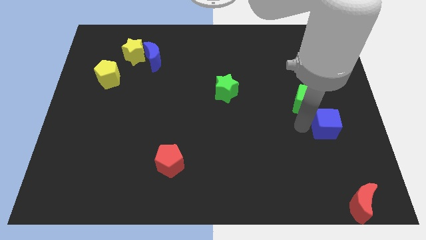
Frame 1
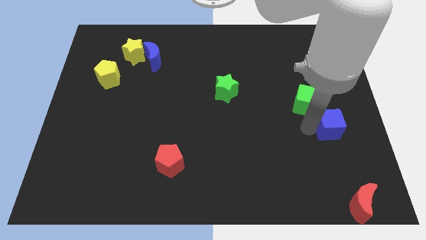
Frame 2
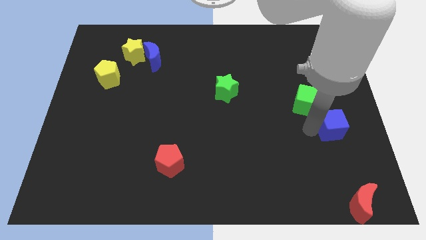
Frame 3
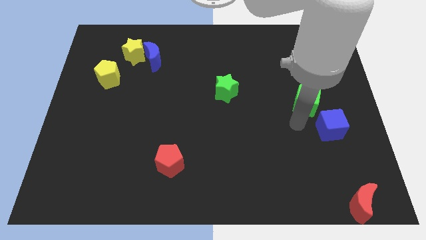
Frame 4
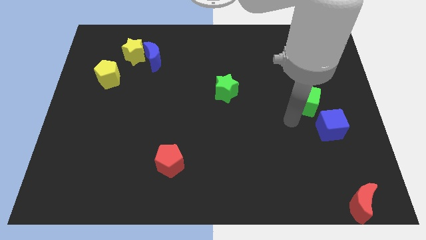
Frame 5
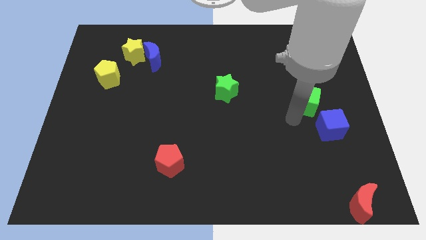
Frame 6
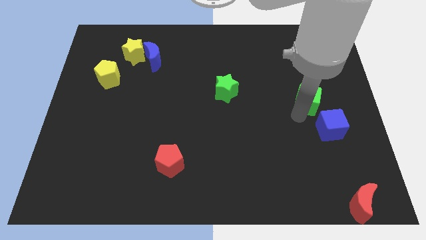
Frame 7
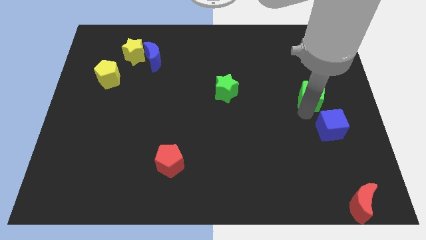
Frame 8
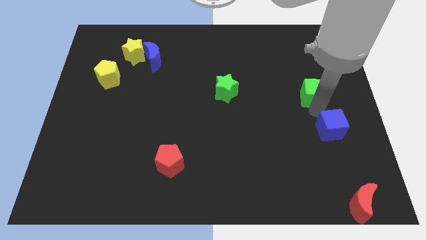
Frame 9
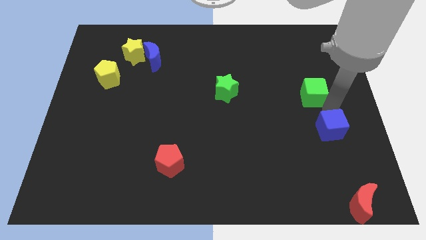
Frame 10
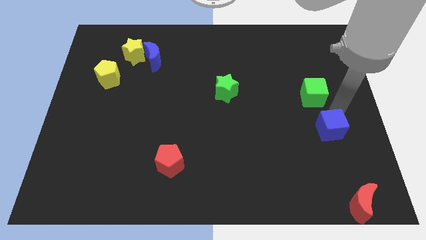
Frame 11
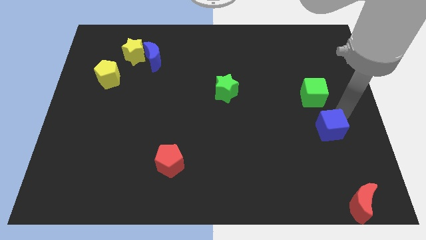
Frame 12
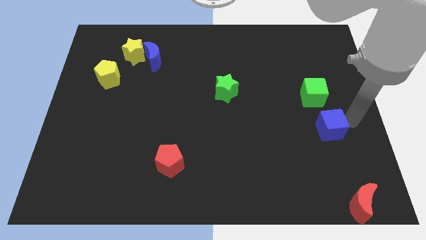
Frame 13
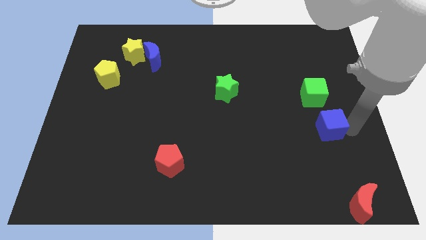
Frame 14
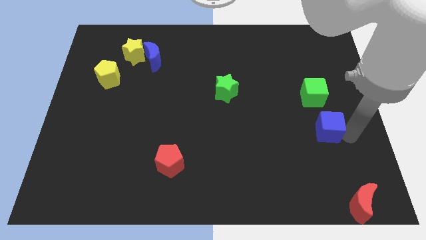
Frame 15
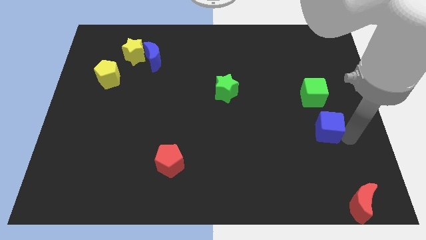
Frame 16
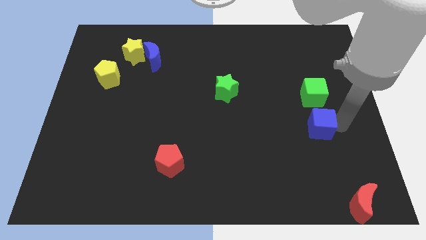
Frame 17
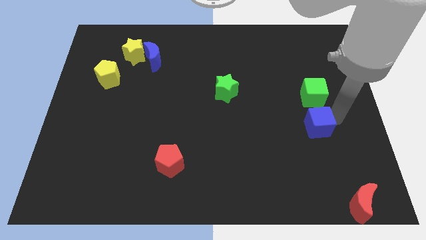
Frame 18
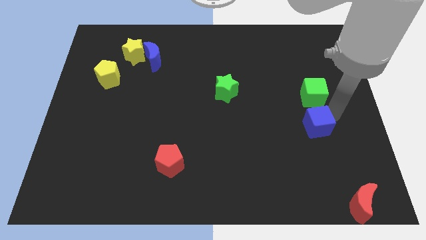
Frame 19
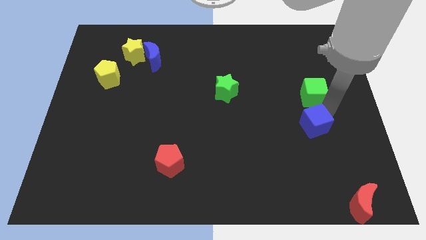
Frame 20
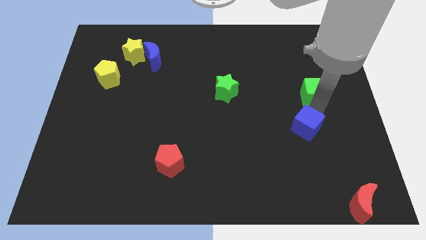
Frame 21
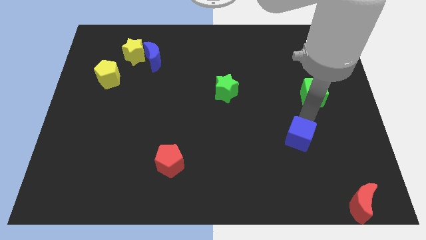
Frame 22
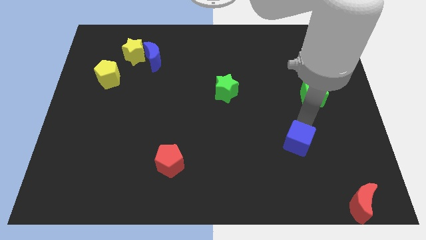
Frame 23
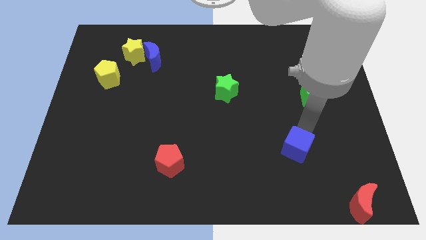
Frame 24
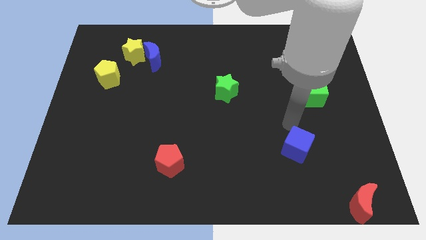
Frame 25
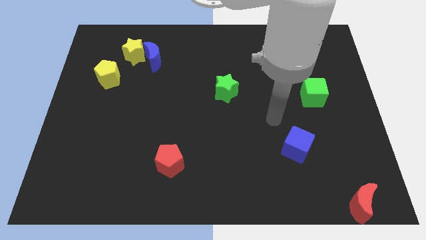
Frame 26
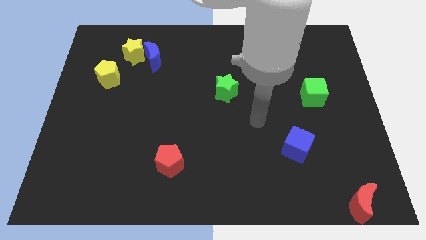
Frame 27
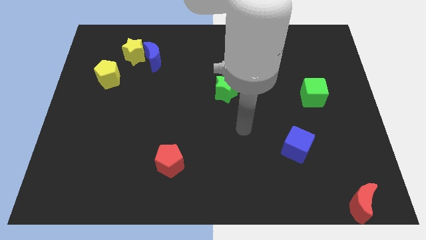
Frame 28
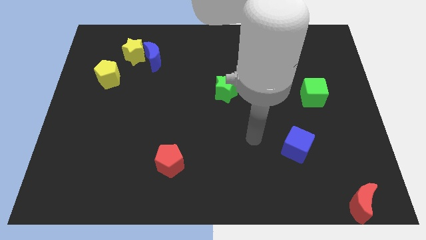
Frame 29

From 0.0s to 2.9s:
push the blue cube towards the bottom

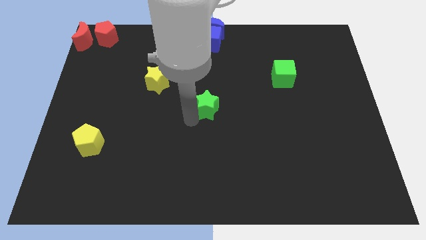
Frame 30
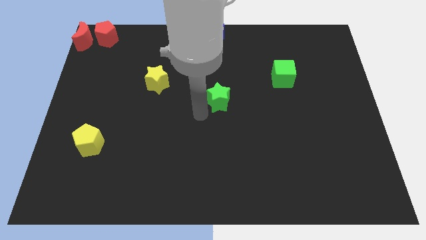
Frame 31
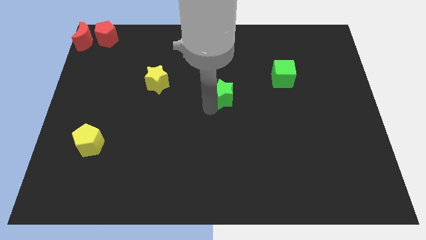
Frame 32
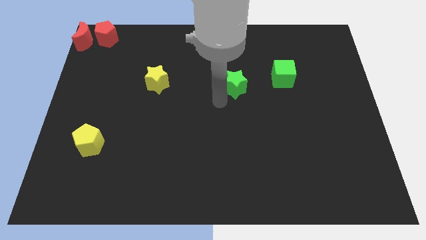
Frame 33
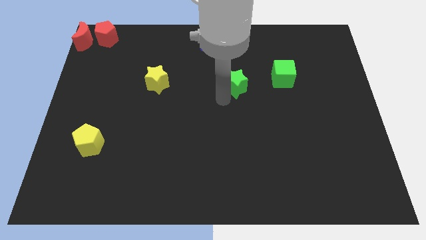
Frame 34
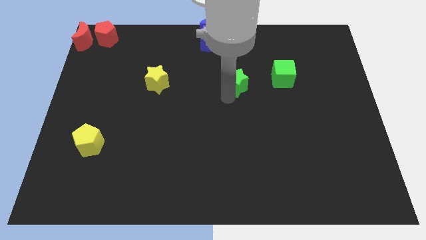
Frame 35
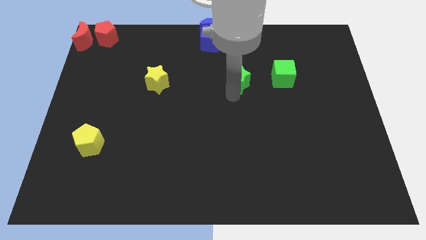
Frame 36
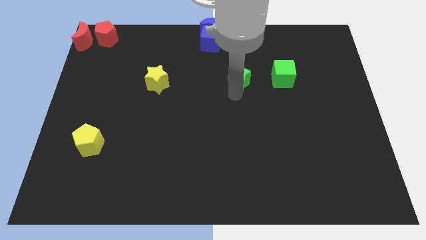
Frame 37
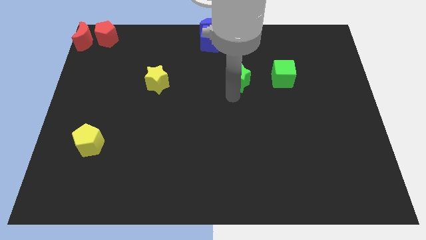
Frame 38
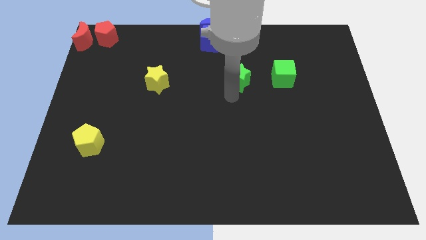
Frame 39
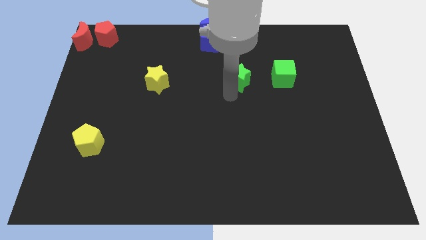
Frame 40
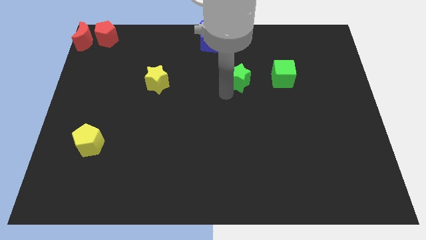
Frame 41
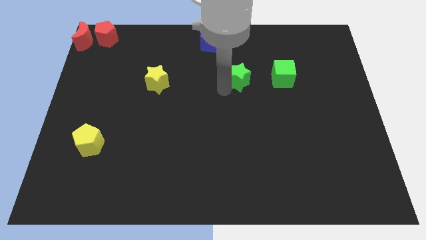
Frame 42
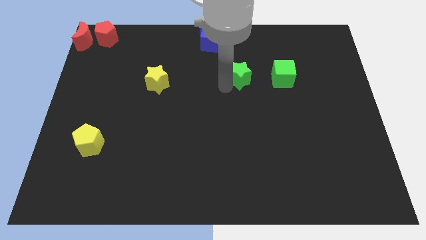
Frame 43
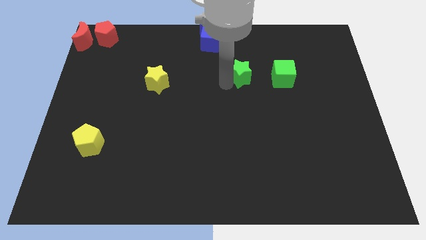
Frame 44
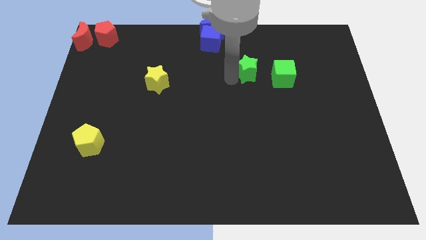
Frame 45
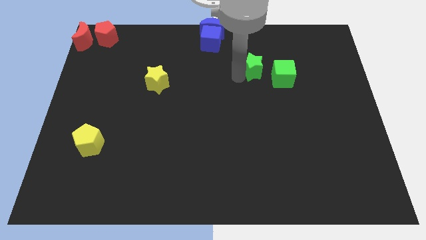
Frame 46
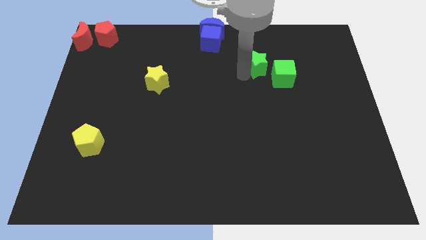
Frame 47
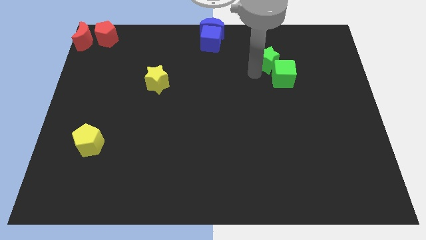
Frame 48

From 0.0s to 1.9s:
move the green star towards the green cube

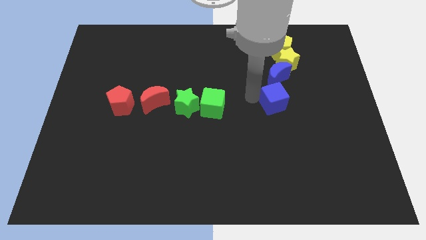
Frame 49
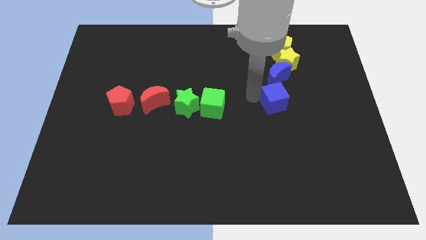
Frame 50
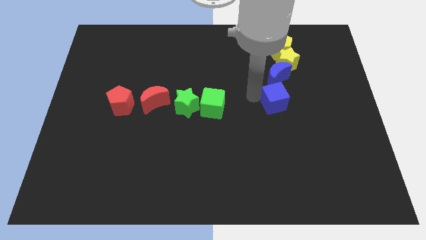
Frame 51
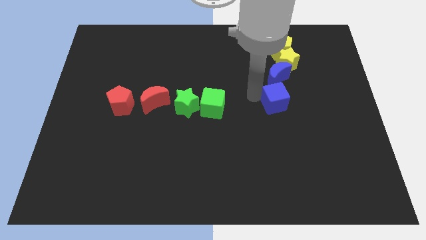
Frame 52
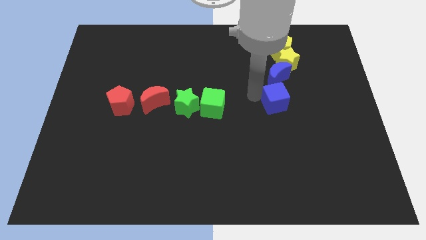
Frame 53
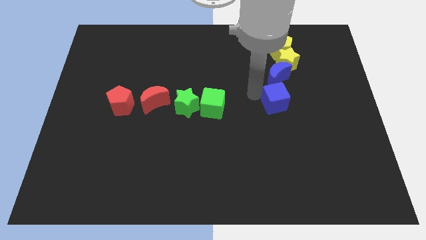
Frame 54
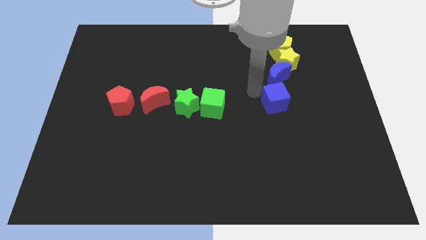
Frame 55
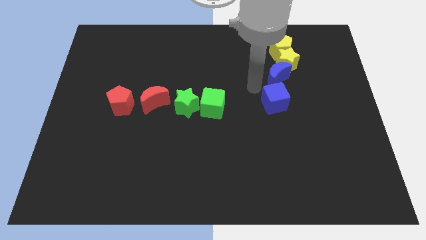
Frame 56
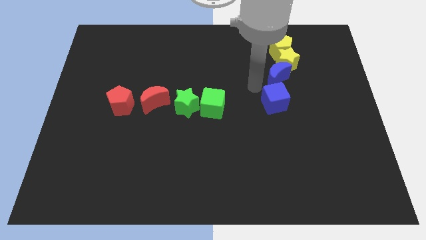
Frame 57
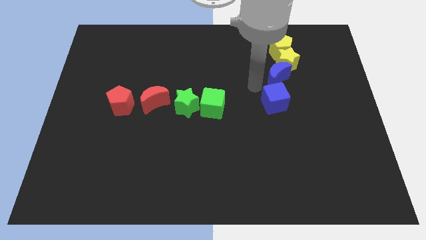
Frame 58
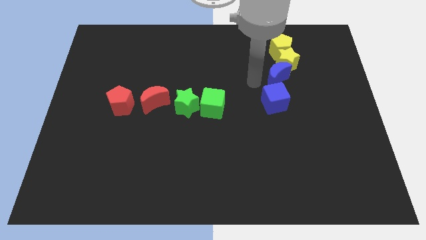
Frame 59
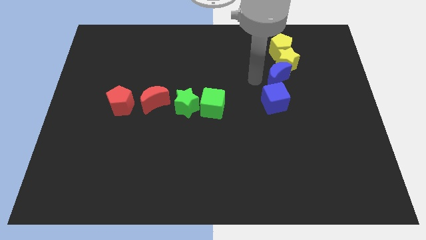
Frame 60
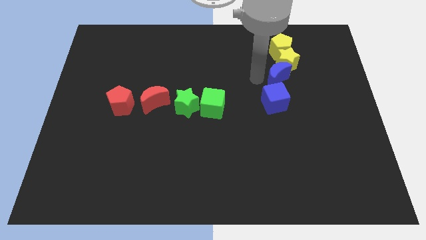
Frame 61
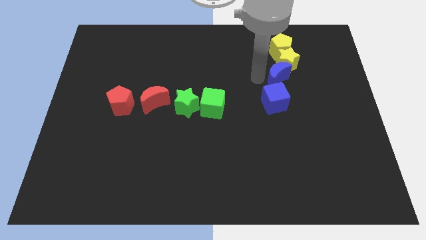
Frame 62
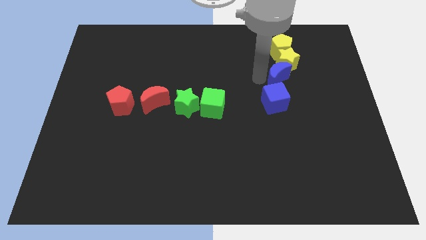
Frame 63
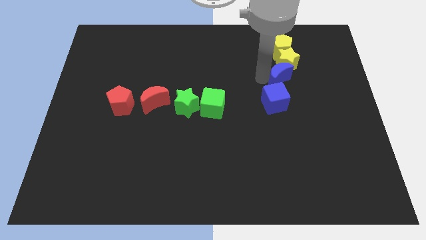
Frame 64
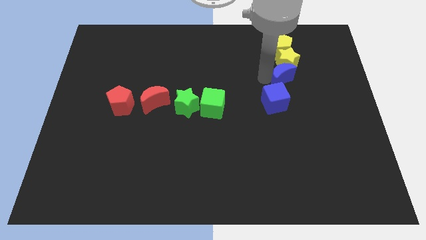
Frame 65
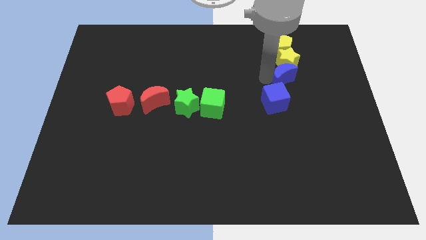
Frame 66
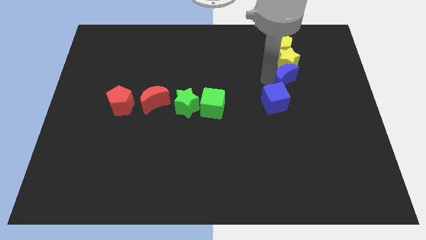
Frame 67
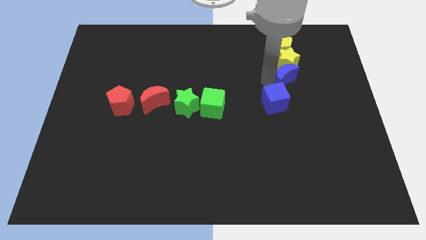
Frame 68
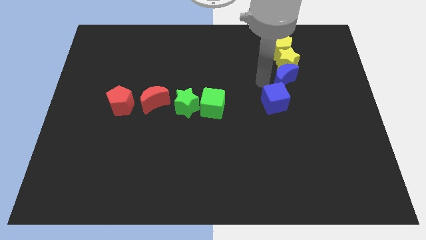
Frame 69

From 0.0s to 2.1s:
push the blue moon towards the bottom of the yellow star

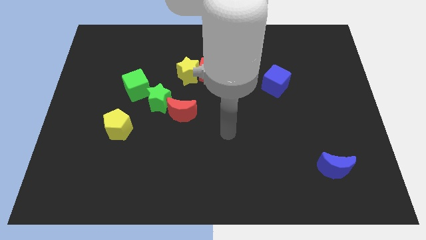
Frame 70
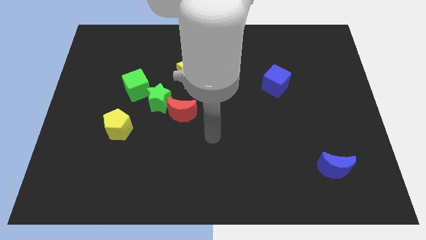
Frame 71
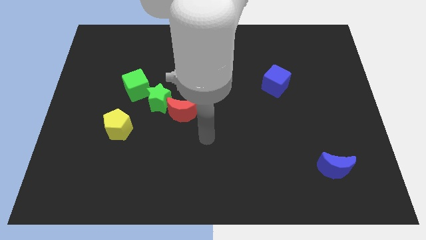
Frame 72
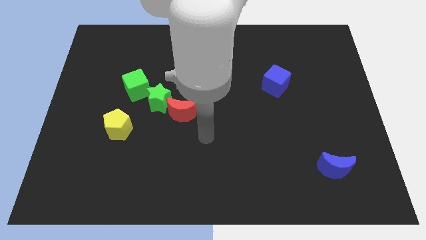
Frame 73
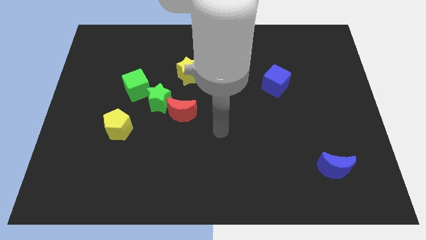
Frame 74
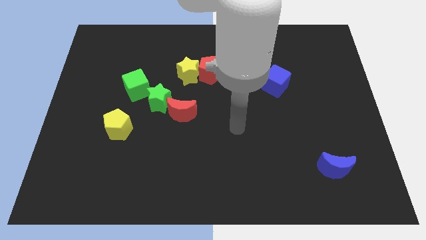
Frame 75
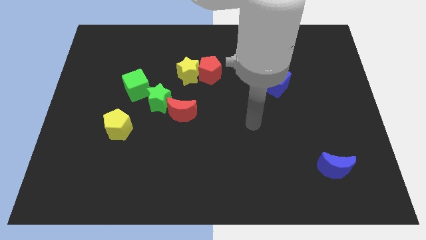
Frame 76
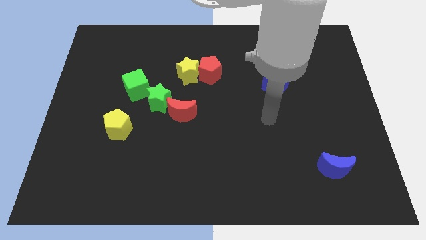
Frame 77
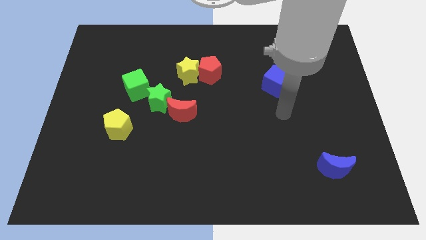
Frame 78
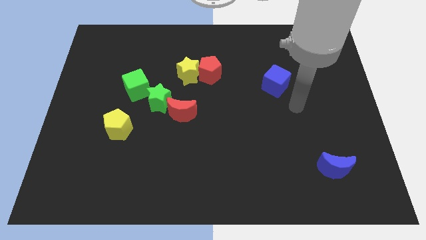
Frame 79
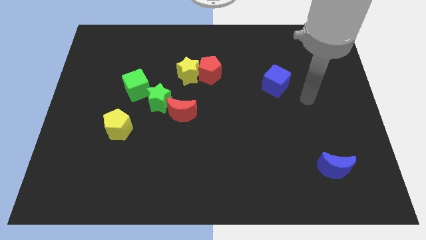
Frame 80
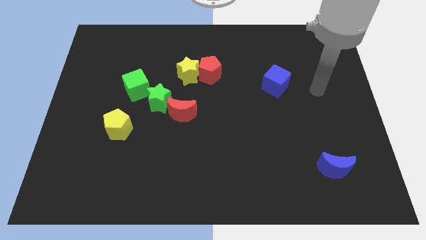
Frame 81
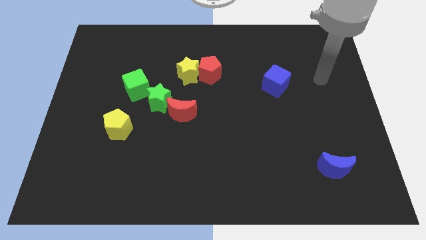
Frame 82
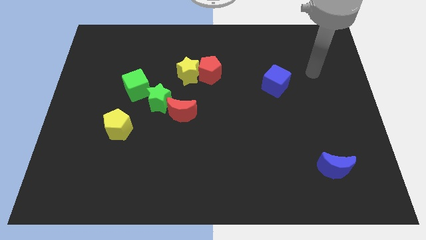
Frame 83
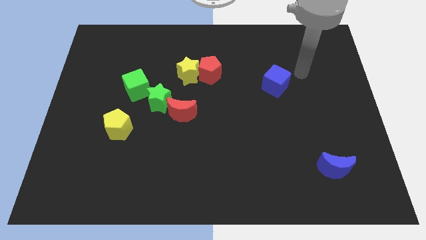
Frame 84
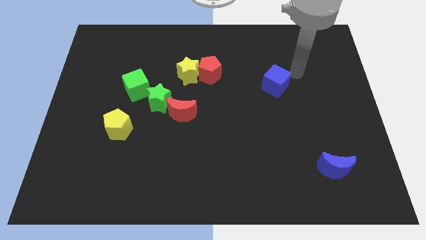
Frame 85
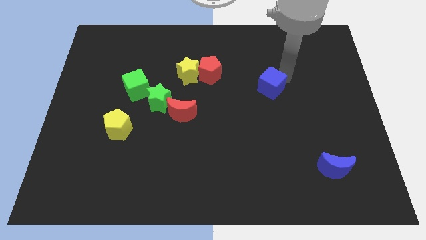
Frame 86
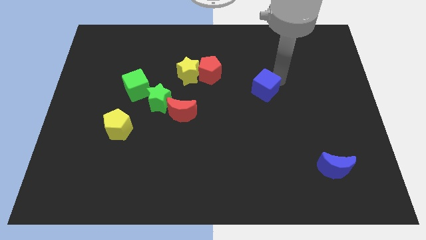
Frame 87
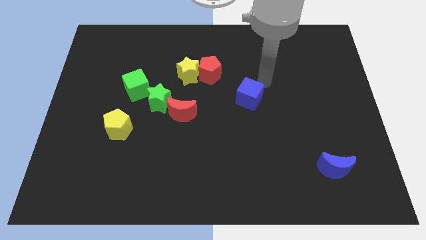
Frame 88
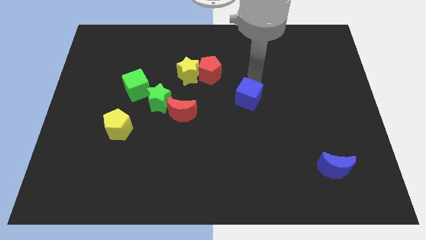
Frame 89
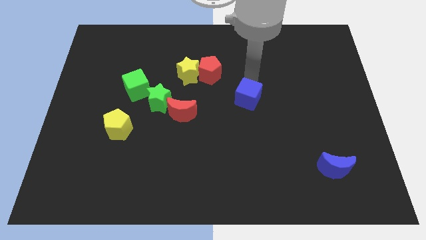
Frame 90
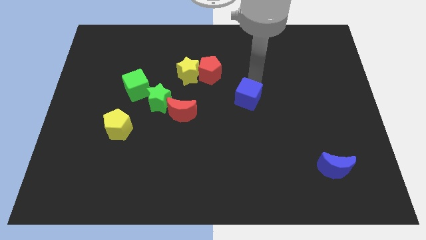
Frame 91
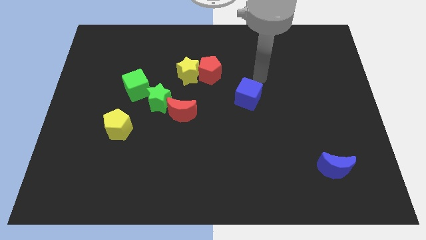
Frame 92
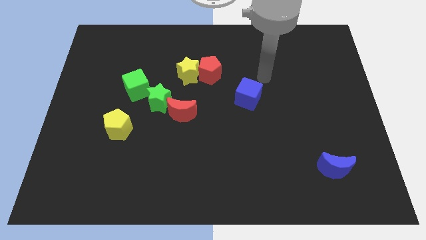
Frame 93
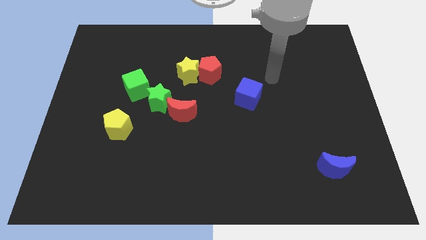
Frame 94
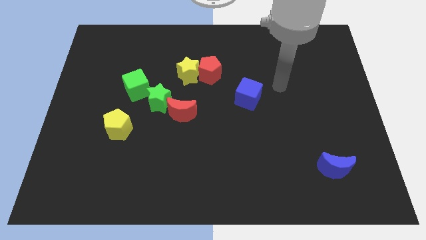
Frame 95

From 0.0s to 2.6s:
slightly move the blue cube to the left
